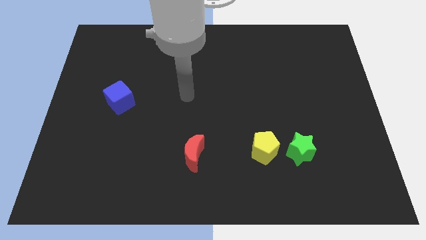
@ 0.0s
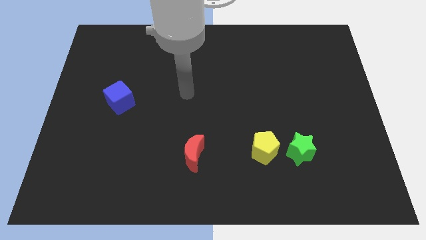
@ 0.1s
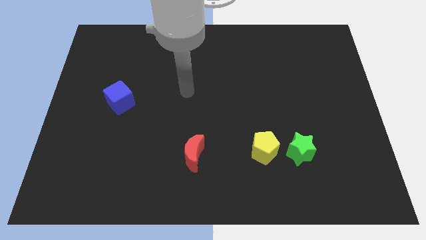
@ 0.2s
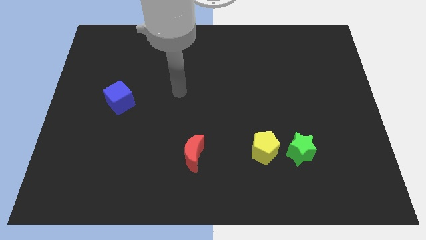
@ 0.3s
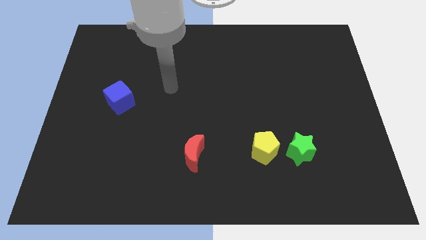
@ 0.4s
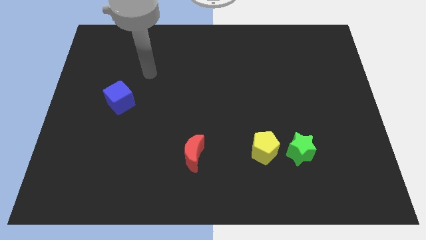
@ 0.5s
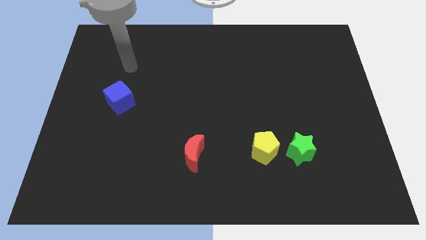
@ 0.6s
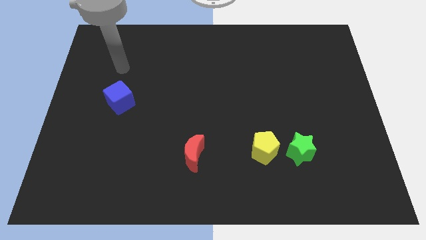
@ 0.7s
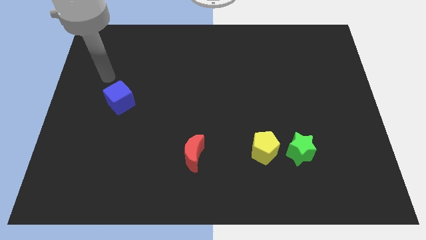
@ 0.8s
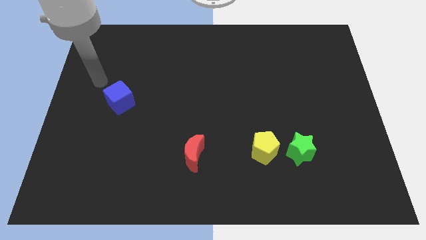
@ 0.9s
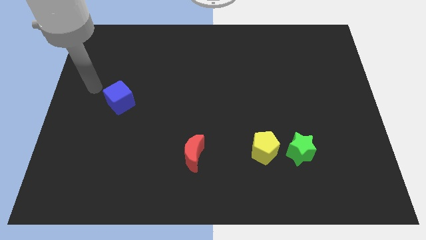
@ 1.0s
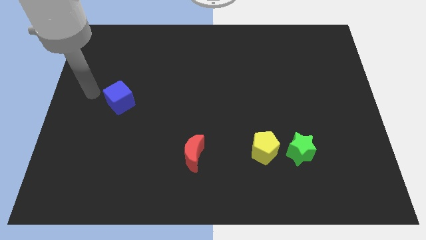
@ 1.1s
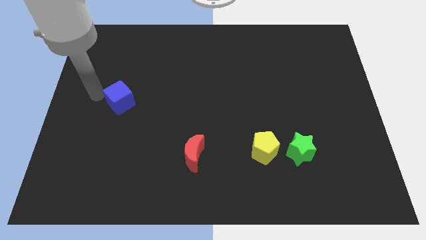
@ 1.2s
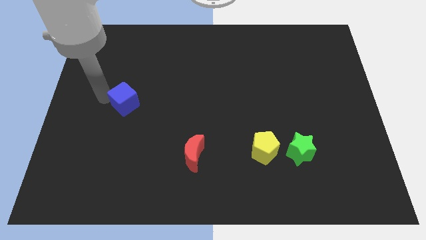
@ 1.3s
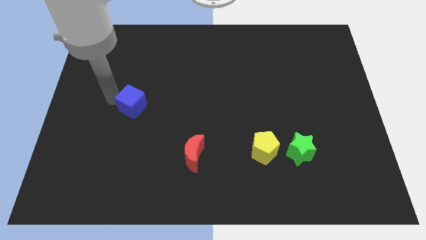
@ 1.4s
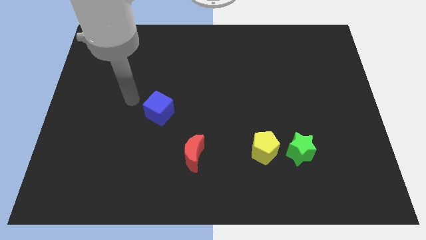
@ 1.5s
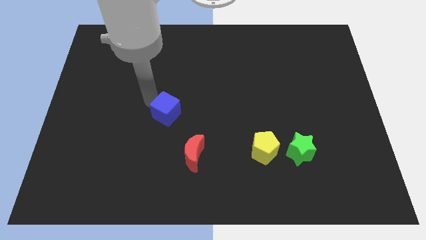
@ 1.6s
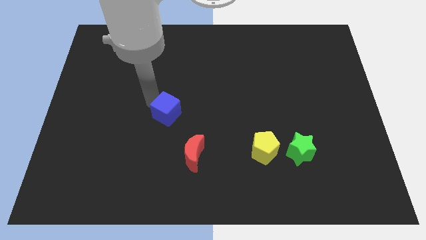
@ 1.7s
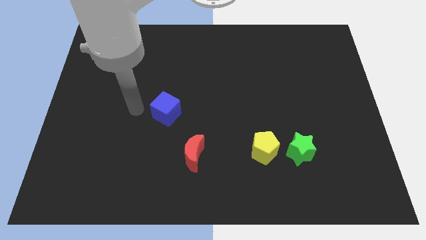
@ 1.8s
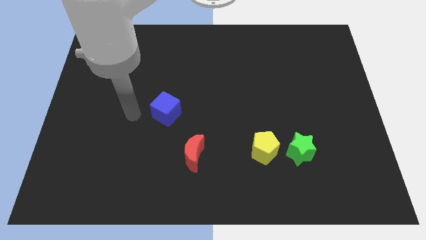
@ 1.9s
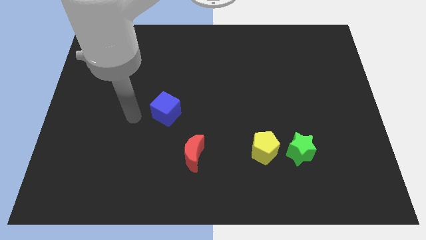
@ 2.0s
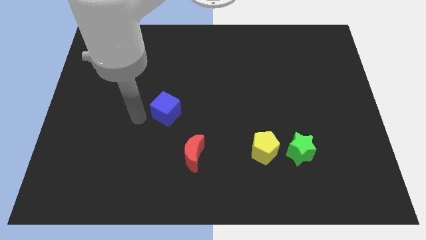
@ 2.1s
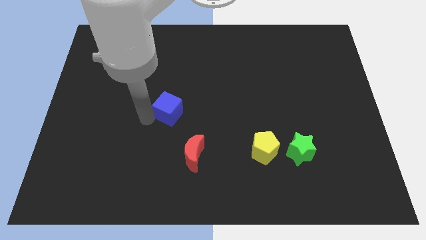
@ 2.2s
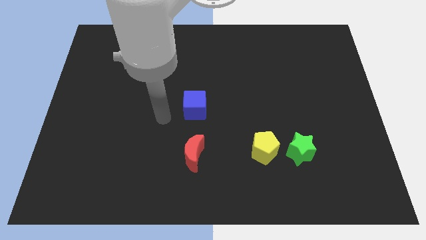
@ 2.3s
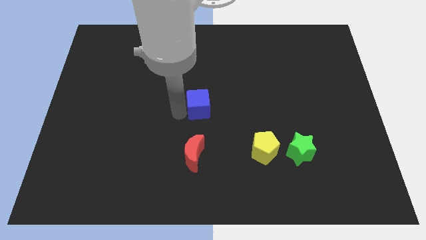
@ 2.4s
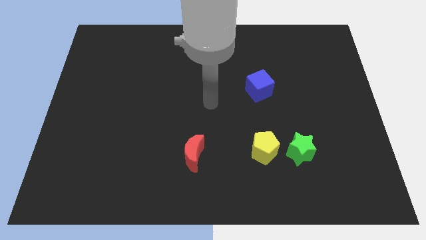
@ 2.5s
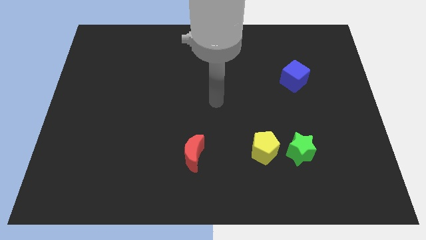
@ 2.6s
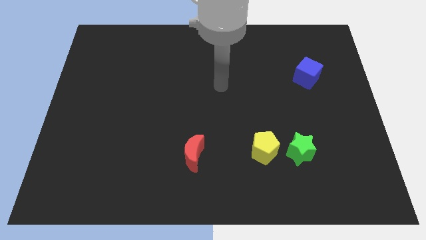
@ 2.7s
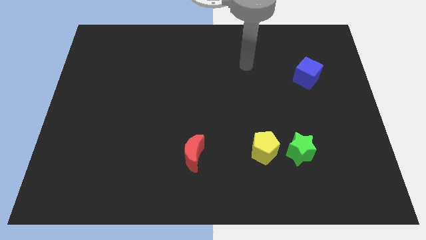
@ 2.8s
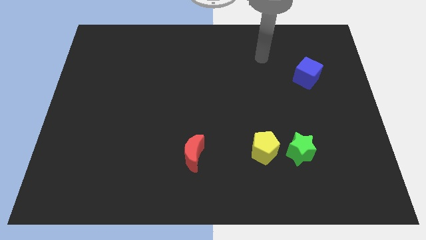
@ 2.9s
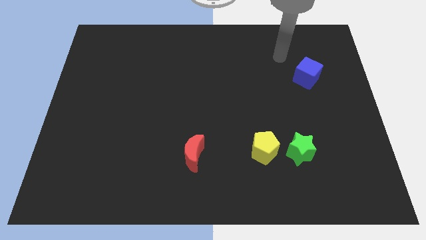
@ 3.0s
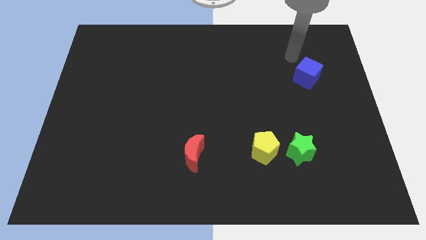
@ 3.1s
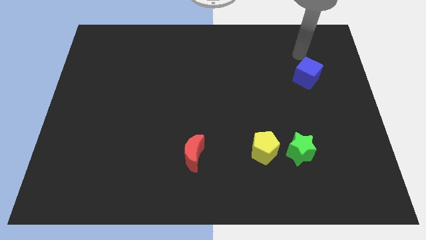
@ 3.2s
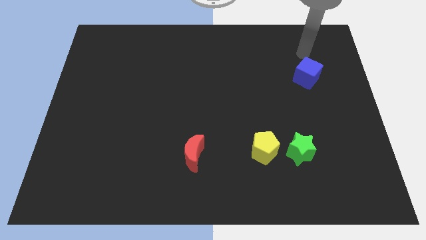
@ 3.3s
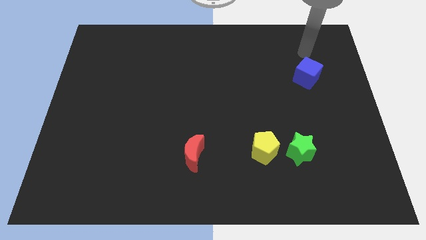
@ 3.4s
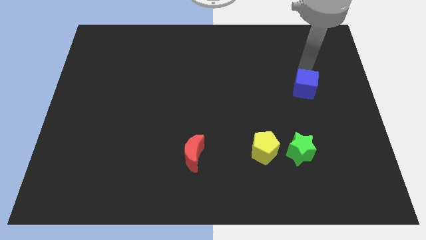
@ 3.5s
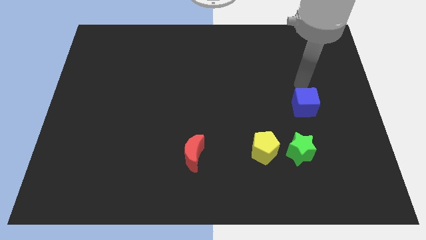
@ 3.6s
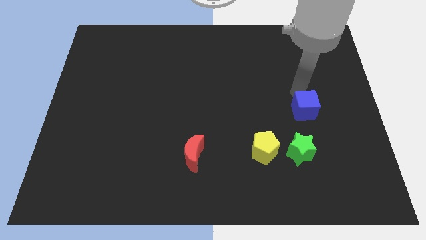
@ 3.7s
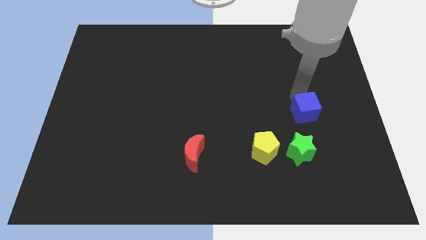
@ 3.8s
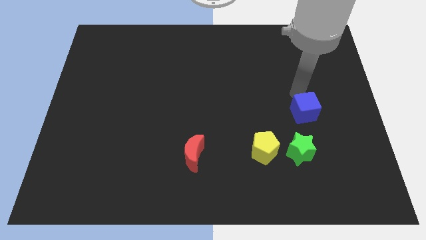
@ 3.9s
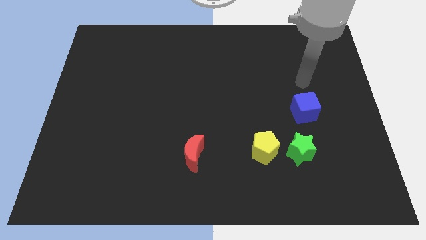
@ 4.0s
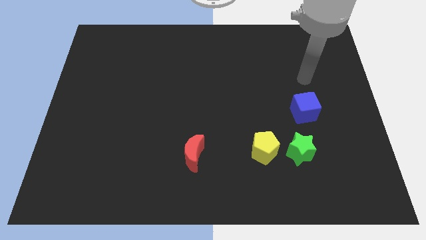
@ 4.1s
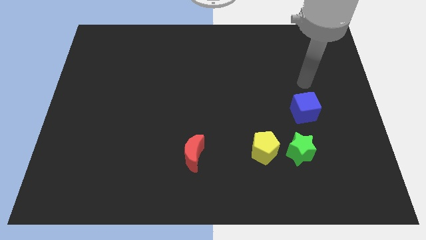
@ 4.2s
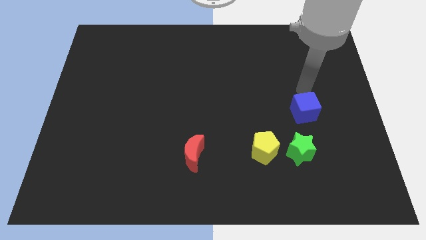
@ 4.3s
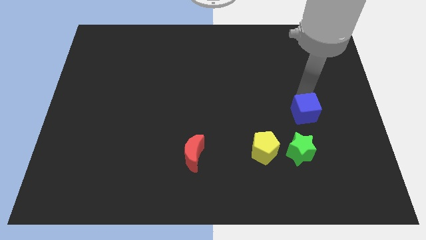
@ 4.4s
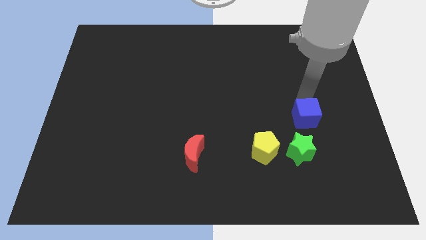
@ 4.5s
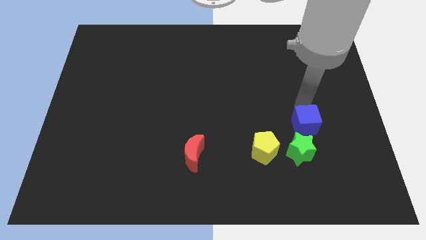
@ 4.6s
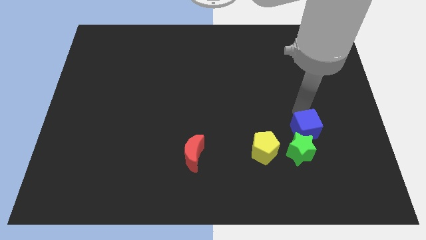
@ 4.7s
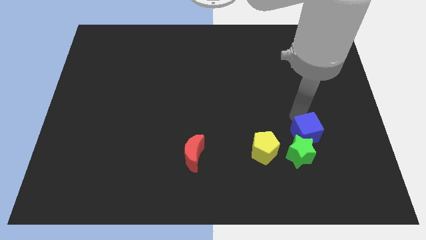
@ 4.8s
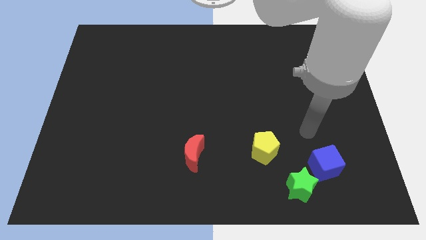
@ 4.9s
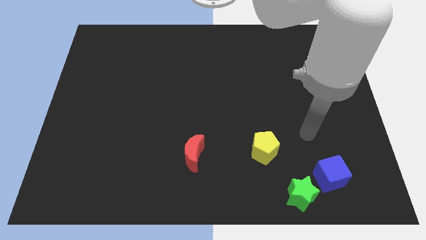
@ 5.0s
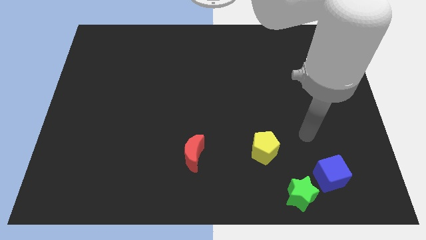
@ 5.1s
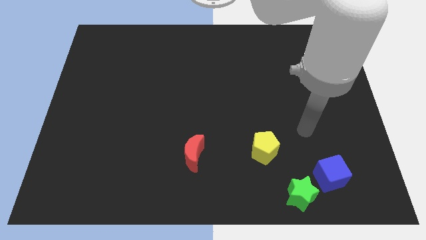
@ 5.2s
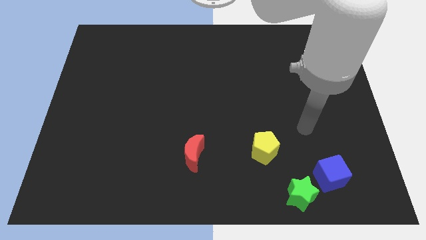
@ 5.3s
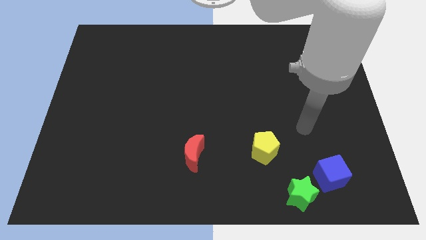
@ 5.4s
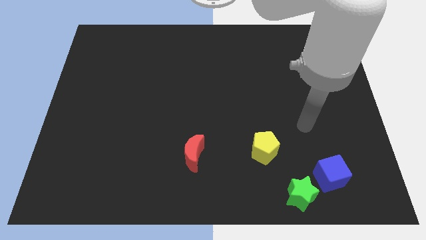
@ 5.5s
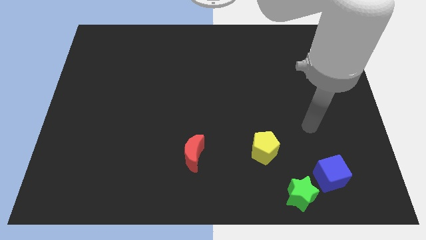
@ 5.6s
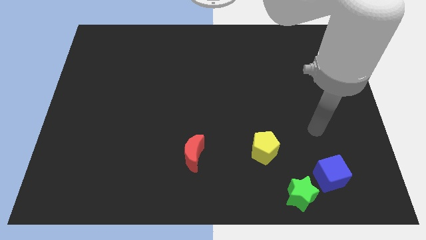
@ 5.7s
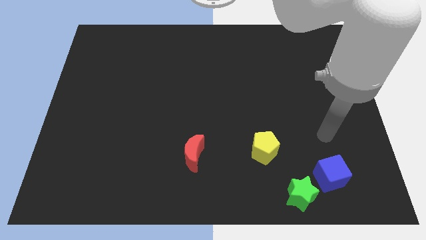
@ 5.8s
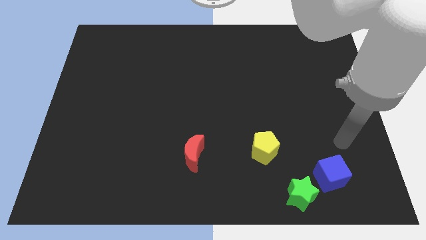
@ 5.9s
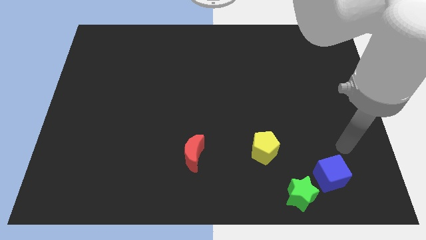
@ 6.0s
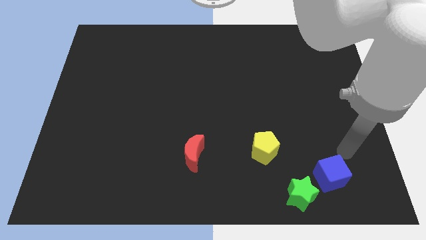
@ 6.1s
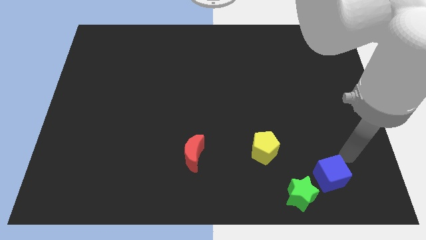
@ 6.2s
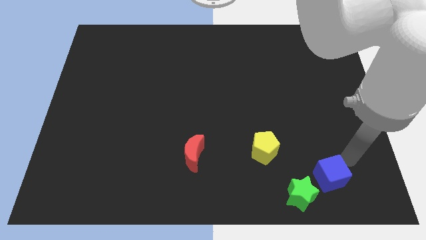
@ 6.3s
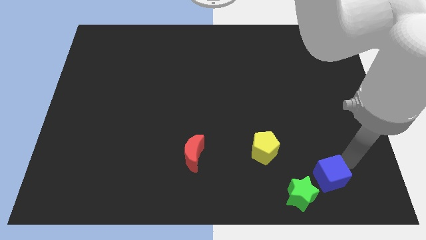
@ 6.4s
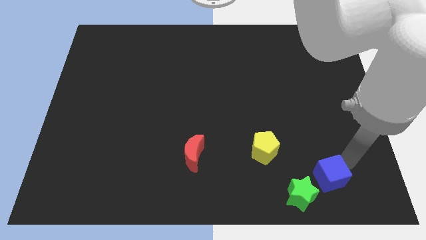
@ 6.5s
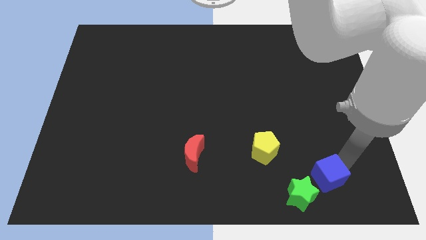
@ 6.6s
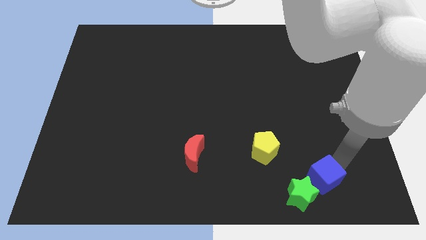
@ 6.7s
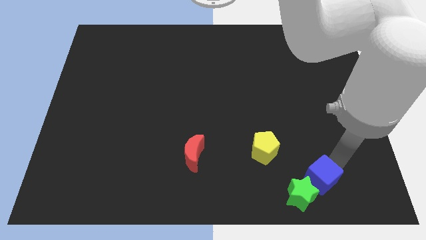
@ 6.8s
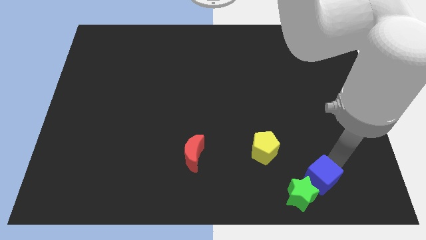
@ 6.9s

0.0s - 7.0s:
slide the cube towards the star

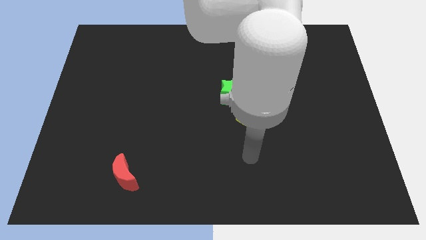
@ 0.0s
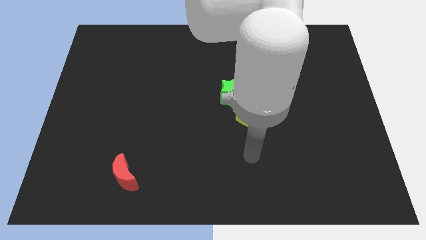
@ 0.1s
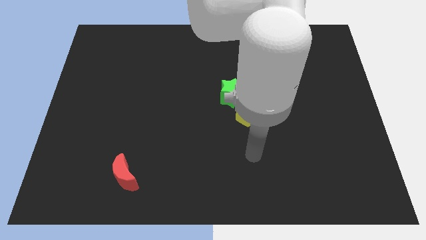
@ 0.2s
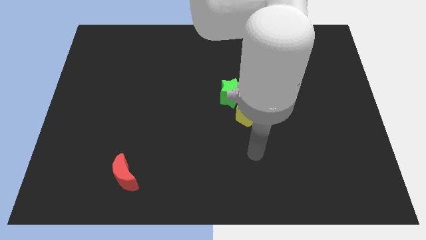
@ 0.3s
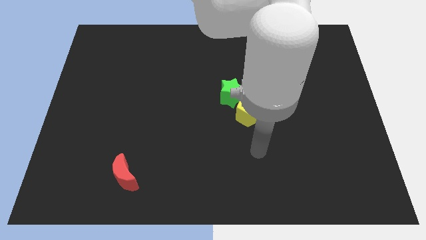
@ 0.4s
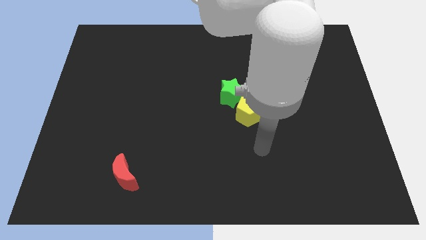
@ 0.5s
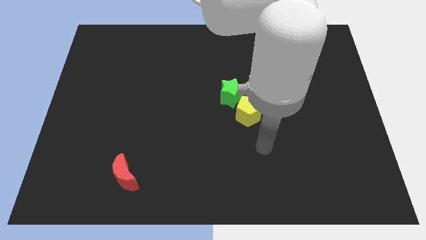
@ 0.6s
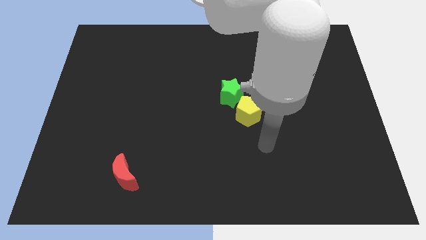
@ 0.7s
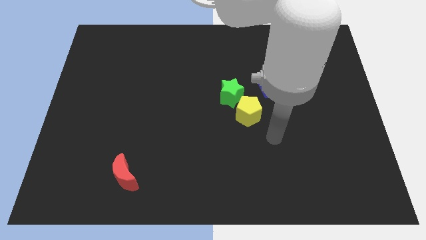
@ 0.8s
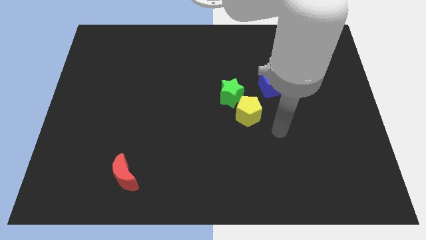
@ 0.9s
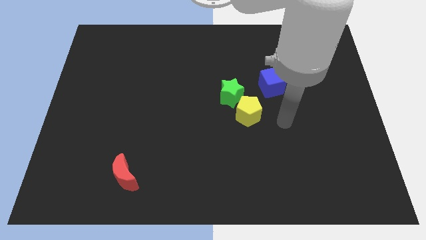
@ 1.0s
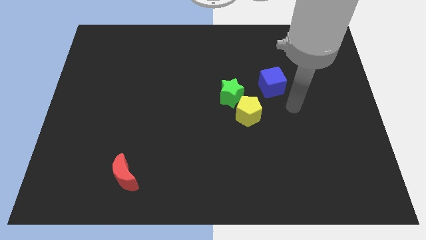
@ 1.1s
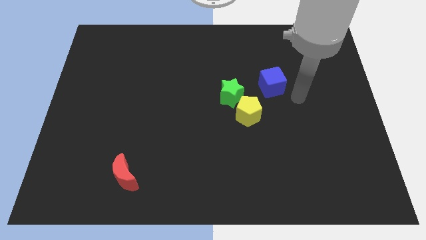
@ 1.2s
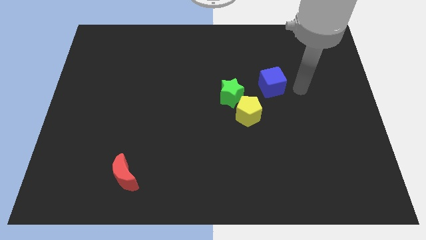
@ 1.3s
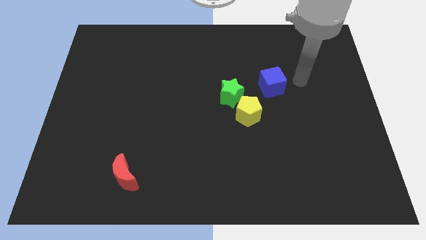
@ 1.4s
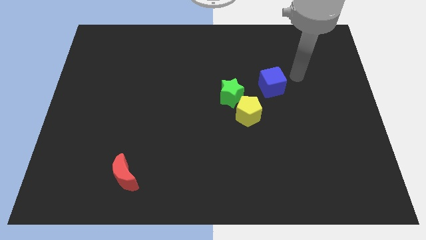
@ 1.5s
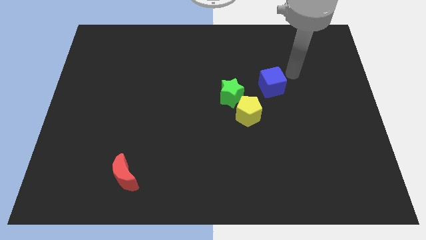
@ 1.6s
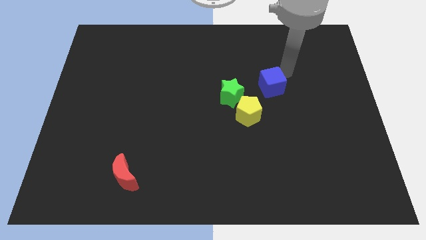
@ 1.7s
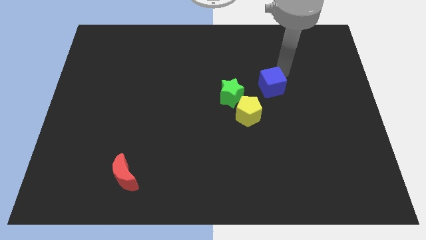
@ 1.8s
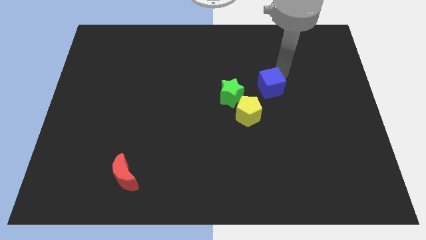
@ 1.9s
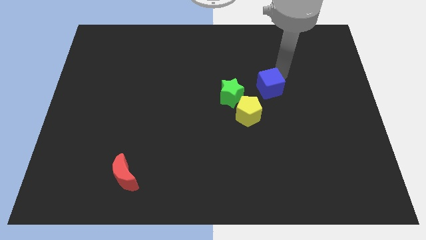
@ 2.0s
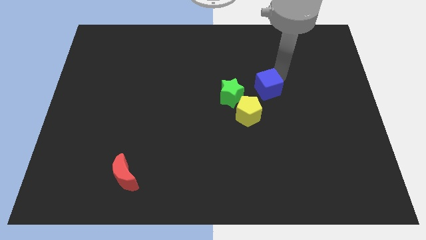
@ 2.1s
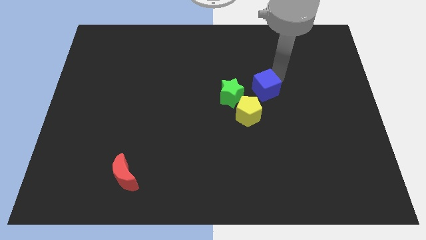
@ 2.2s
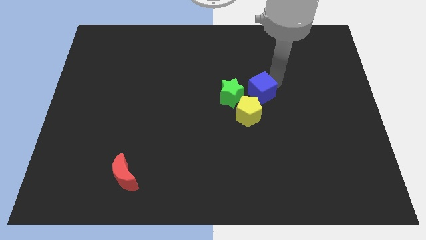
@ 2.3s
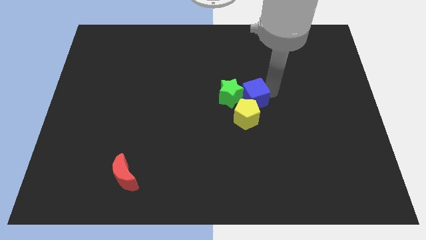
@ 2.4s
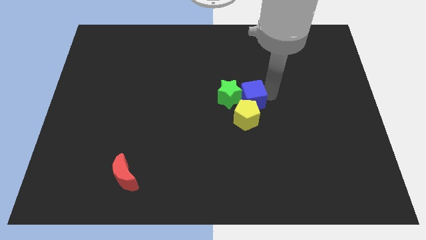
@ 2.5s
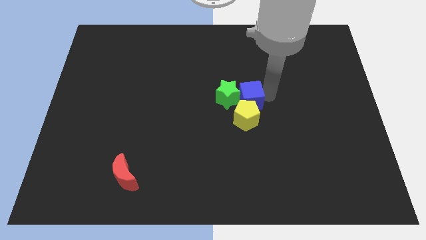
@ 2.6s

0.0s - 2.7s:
move the blue block next to the yellow pentagon
